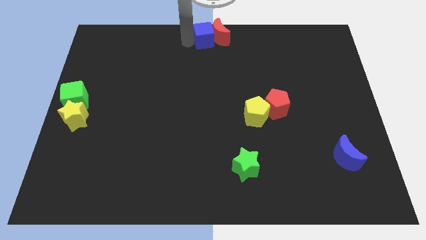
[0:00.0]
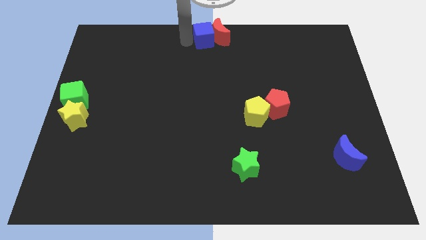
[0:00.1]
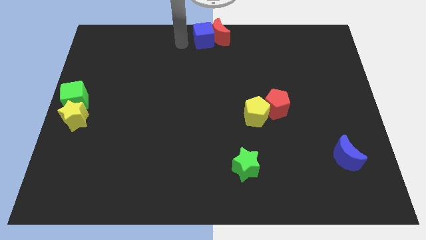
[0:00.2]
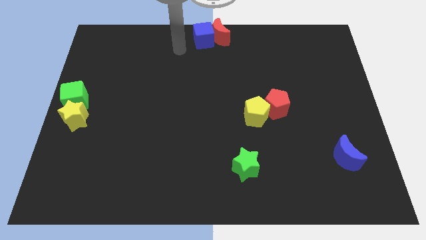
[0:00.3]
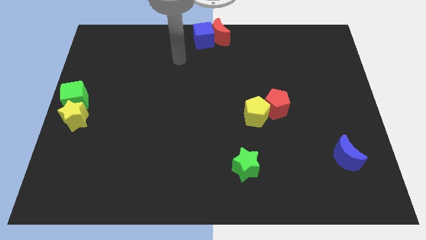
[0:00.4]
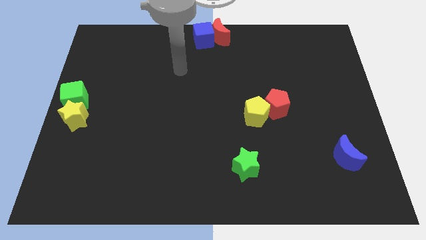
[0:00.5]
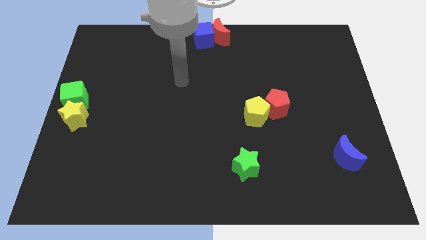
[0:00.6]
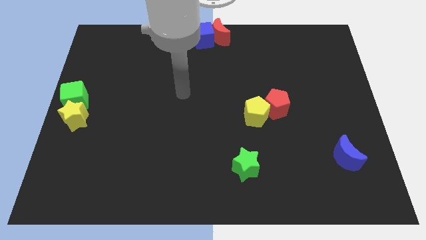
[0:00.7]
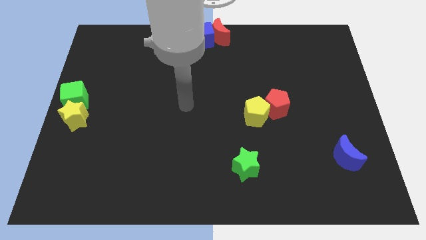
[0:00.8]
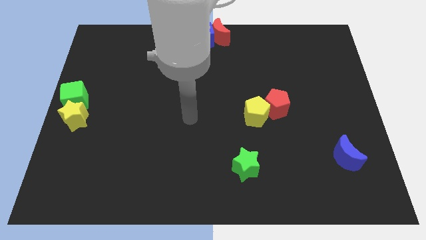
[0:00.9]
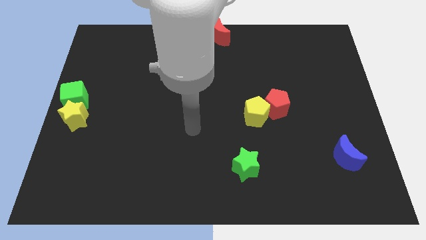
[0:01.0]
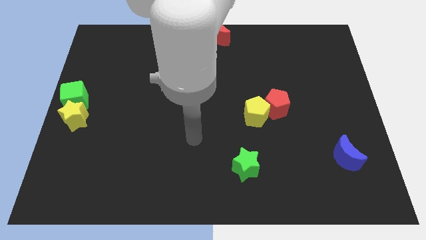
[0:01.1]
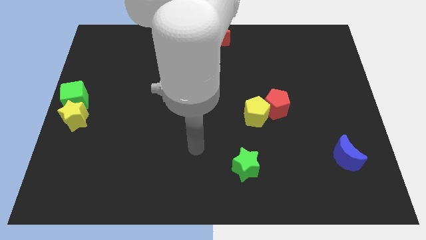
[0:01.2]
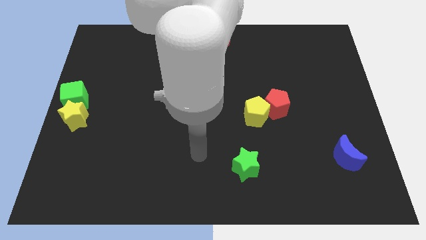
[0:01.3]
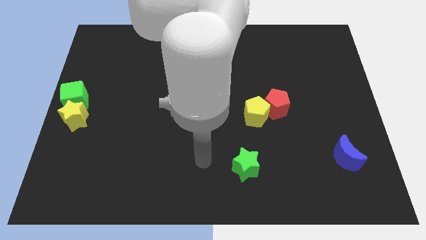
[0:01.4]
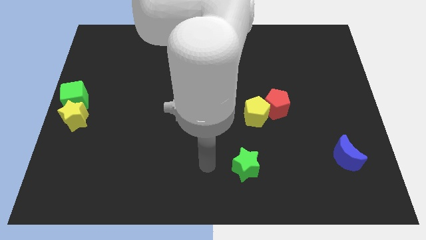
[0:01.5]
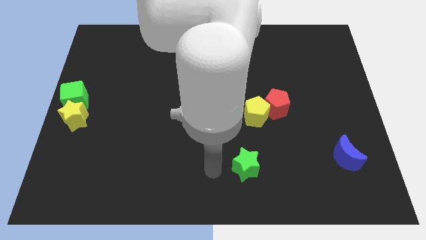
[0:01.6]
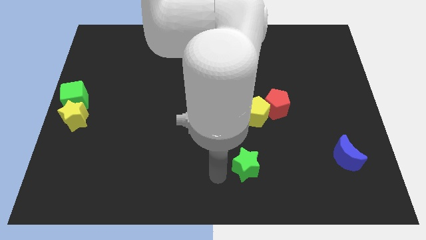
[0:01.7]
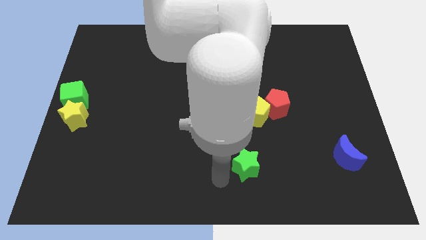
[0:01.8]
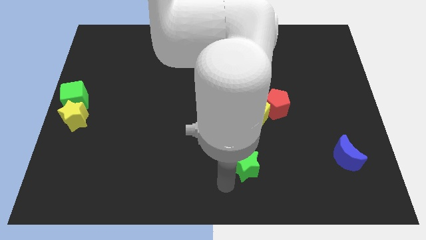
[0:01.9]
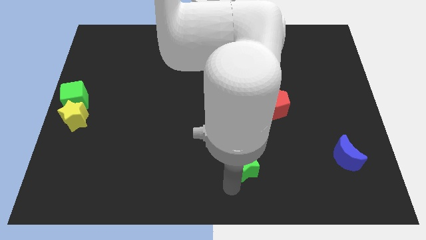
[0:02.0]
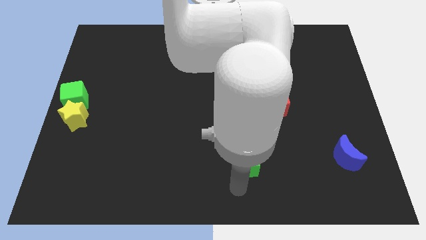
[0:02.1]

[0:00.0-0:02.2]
point your arm below green star

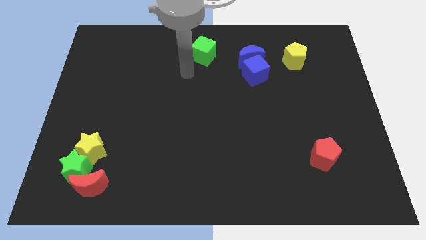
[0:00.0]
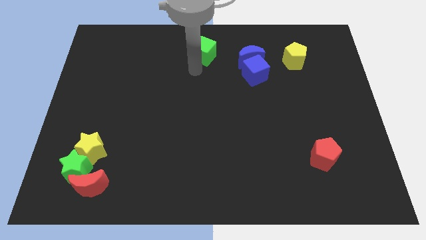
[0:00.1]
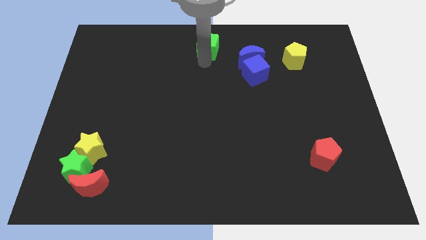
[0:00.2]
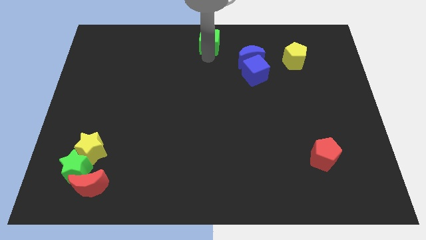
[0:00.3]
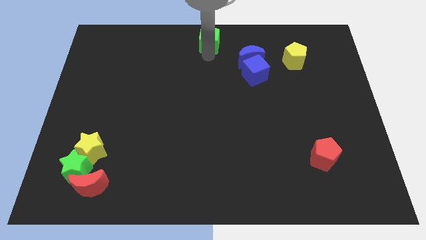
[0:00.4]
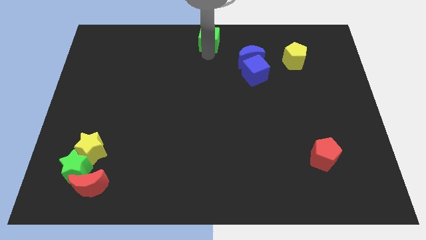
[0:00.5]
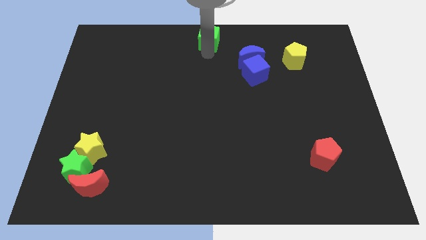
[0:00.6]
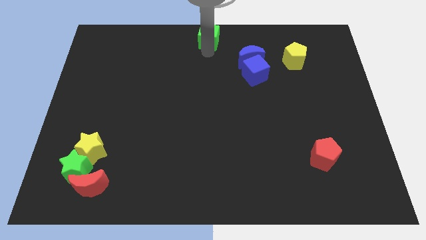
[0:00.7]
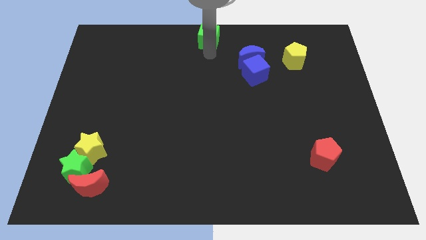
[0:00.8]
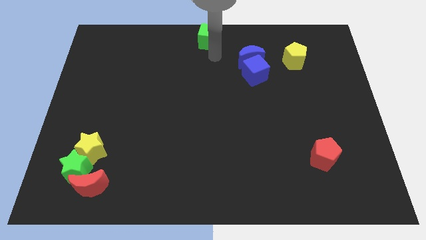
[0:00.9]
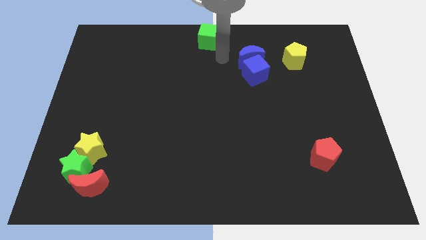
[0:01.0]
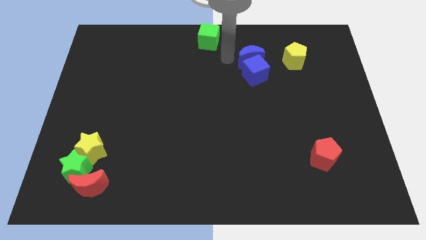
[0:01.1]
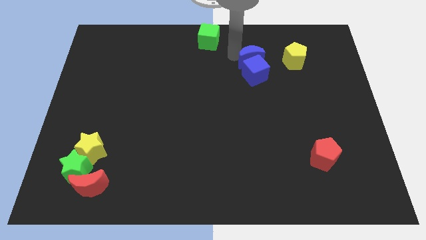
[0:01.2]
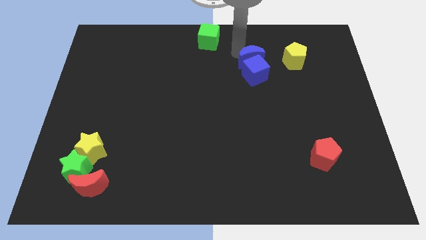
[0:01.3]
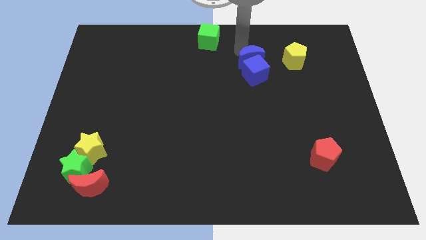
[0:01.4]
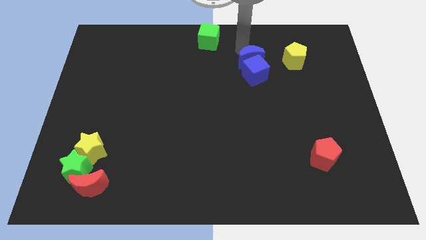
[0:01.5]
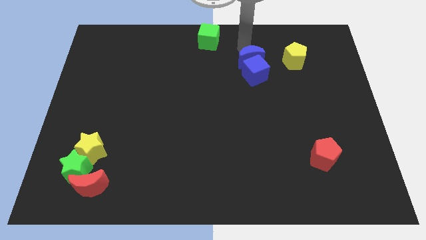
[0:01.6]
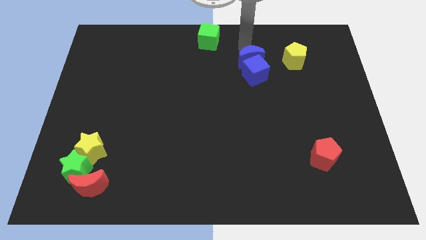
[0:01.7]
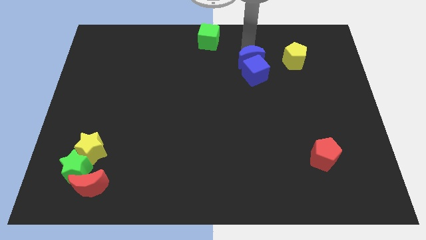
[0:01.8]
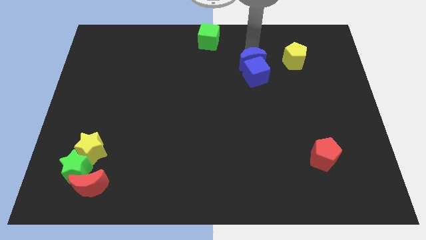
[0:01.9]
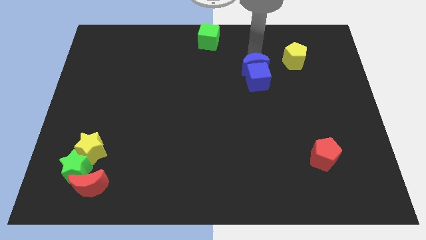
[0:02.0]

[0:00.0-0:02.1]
push the blue blocks to the diagonal of red pentagon

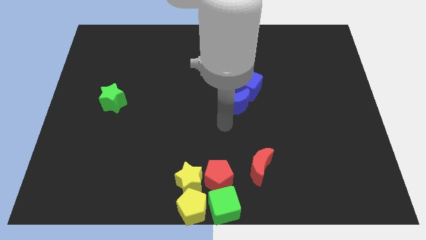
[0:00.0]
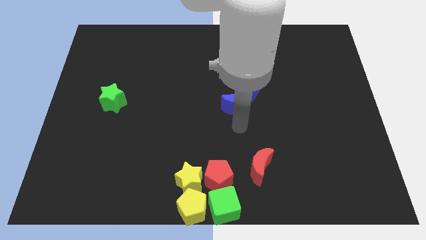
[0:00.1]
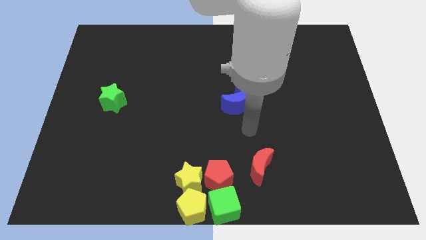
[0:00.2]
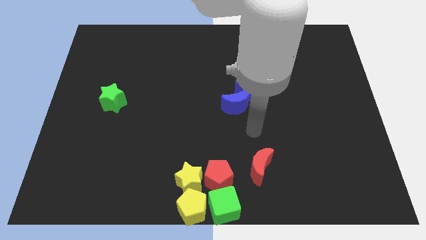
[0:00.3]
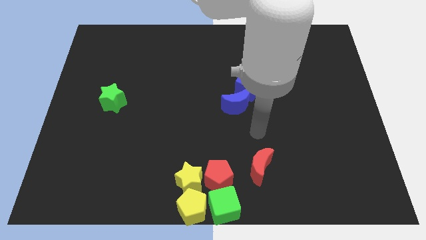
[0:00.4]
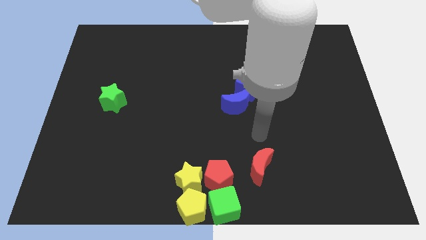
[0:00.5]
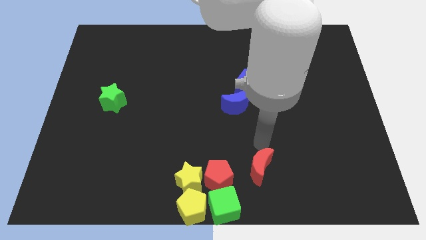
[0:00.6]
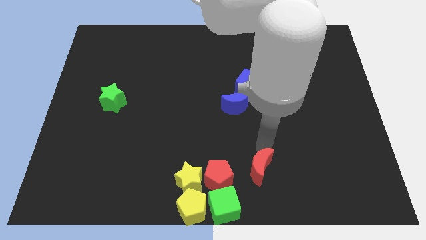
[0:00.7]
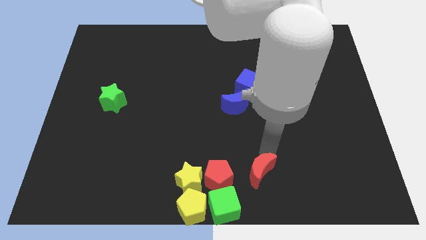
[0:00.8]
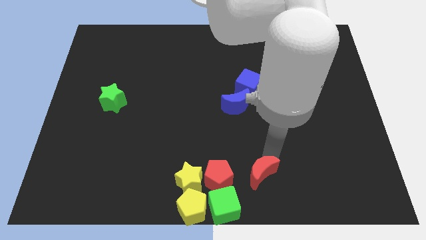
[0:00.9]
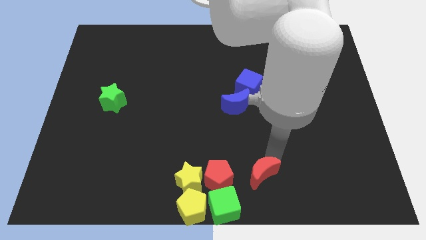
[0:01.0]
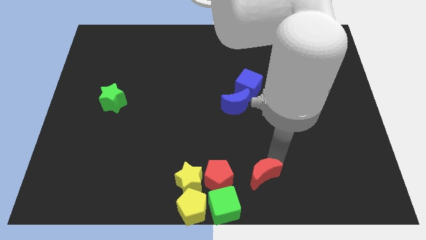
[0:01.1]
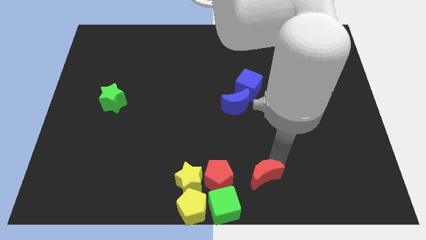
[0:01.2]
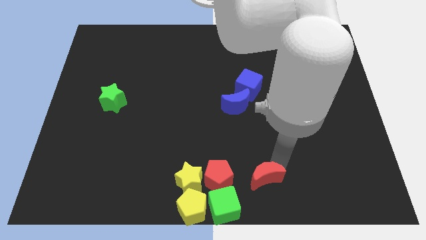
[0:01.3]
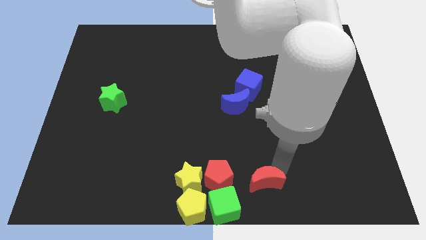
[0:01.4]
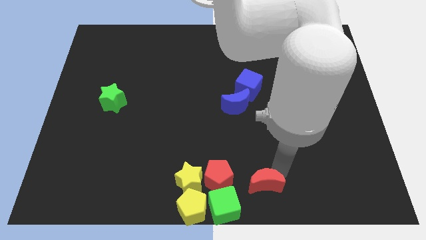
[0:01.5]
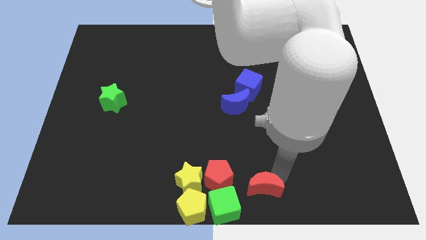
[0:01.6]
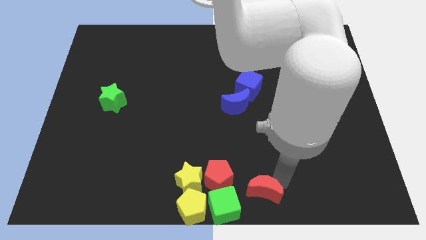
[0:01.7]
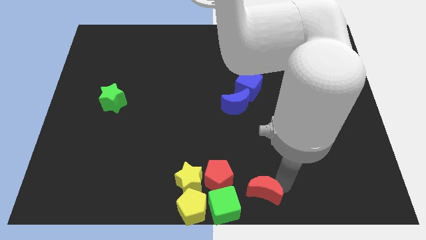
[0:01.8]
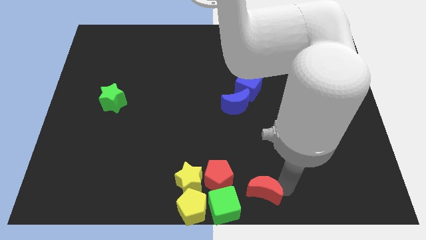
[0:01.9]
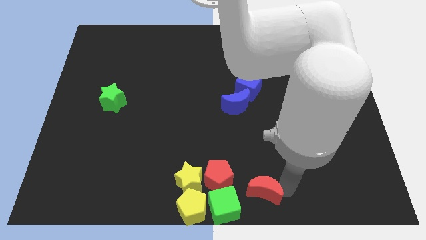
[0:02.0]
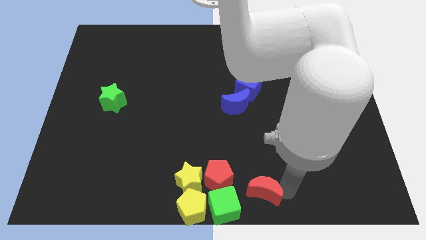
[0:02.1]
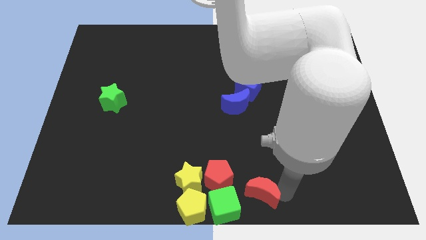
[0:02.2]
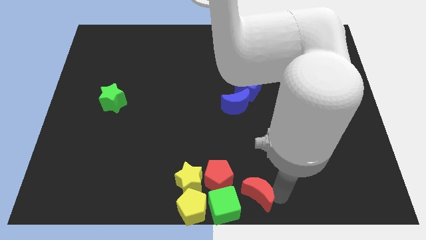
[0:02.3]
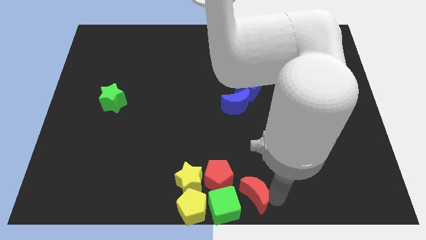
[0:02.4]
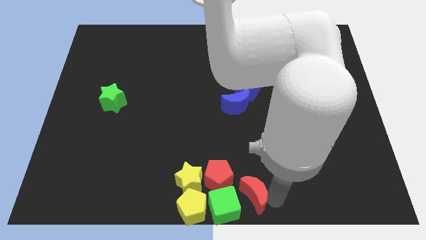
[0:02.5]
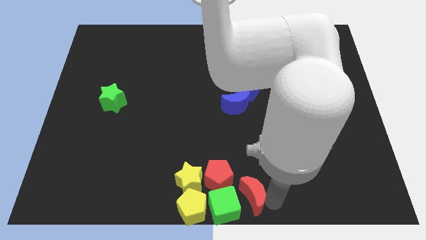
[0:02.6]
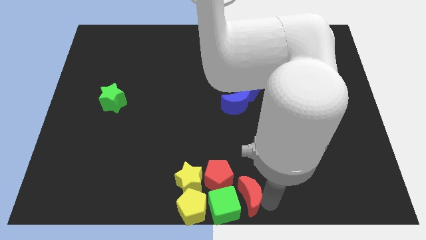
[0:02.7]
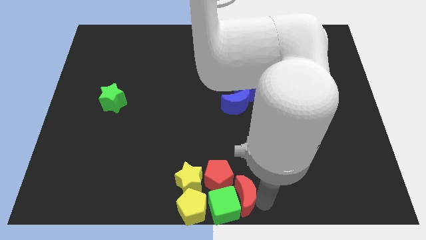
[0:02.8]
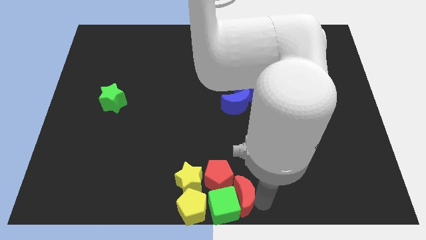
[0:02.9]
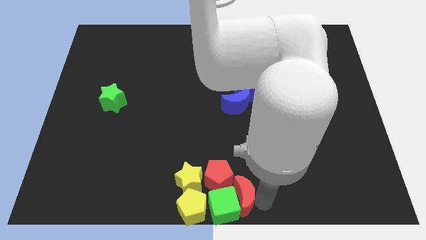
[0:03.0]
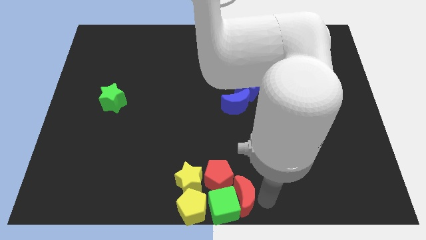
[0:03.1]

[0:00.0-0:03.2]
move the red crescent to the right of the green cube

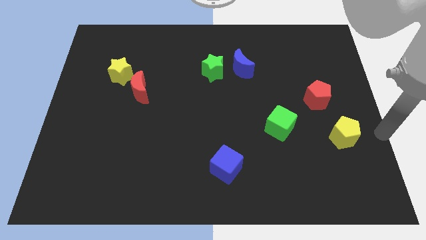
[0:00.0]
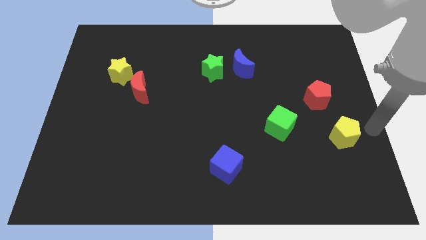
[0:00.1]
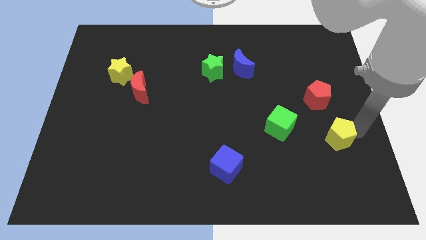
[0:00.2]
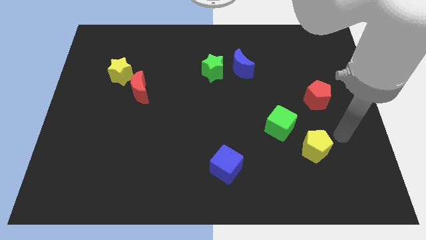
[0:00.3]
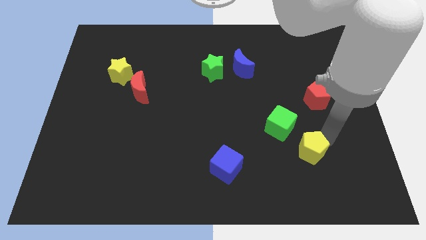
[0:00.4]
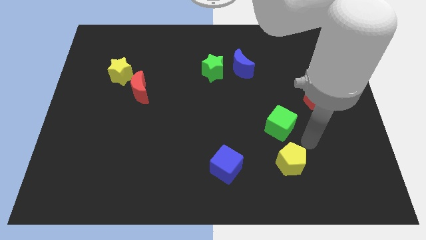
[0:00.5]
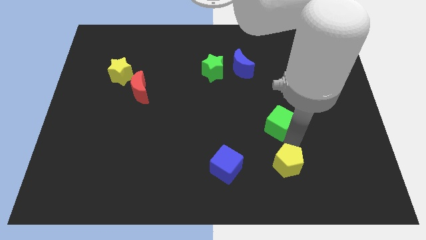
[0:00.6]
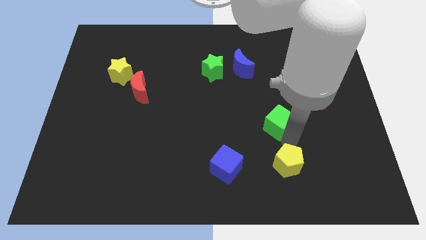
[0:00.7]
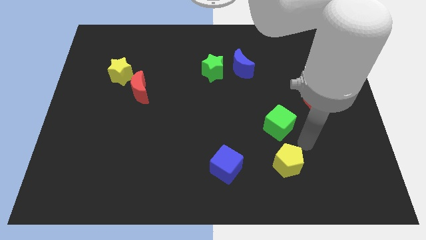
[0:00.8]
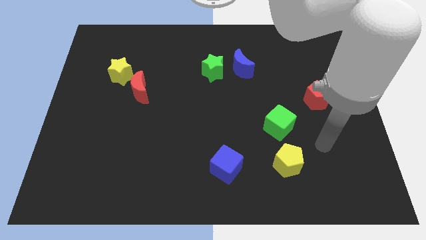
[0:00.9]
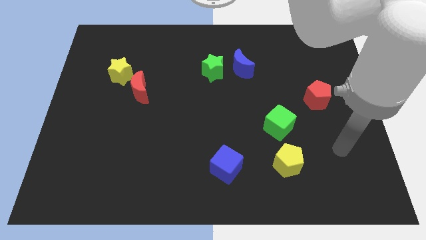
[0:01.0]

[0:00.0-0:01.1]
drag the yellow pentagon downwards

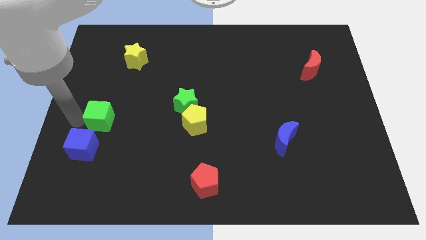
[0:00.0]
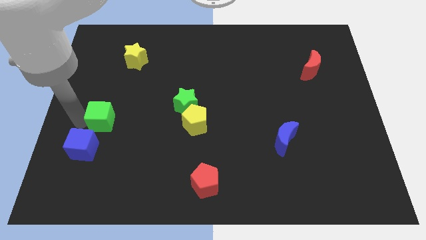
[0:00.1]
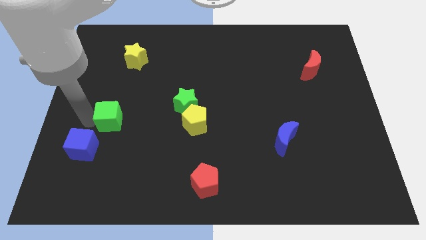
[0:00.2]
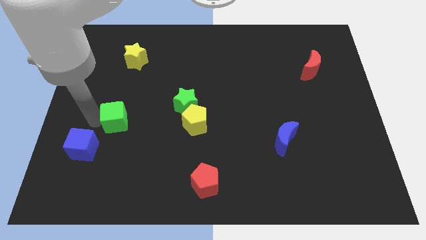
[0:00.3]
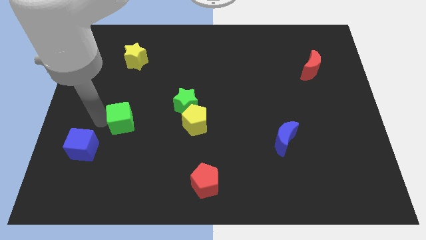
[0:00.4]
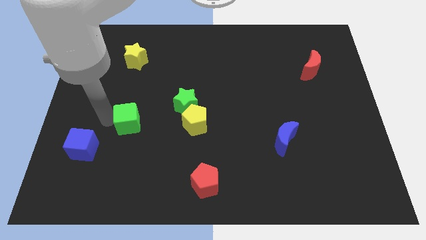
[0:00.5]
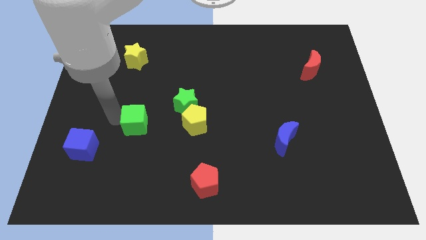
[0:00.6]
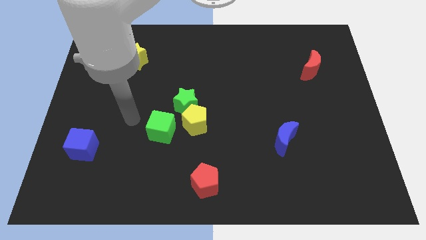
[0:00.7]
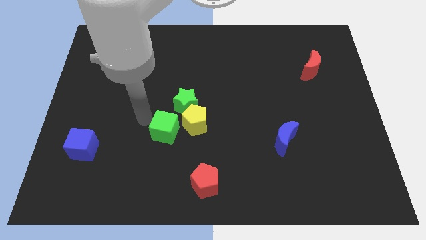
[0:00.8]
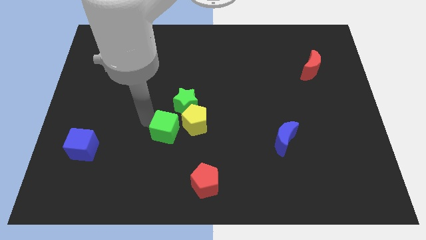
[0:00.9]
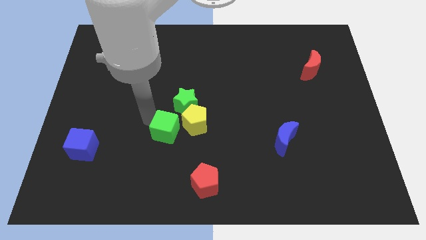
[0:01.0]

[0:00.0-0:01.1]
push green cube parallel to yellow pentagon
